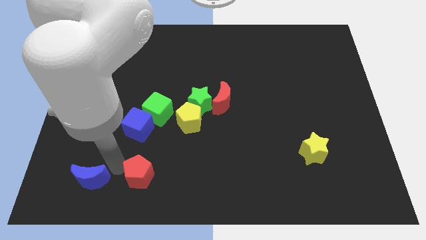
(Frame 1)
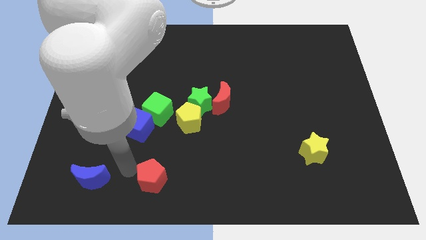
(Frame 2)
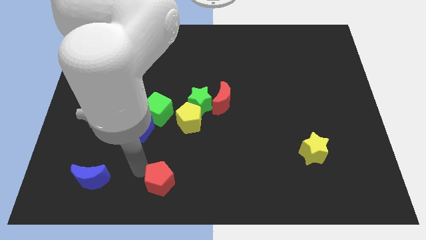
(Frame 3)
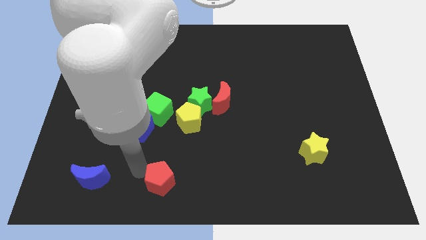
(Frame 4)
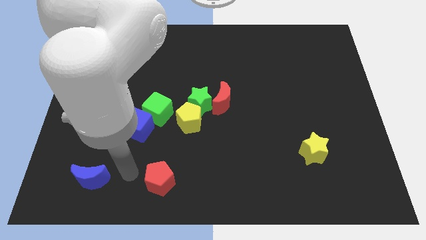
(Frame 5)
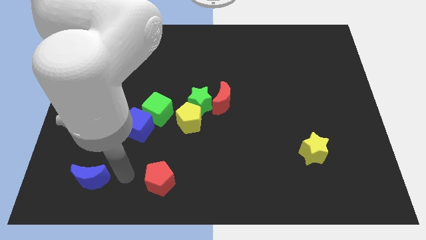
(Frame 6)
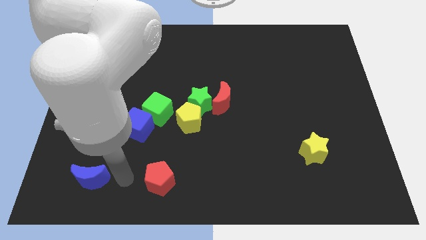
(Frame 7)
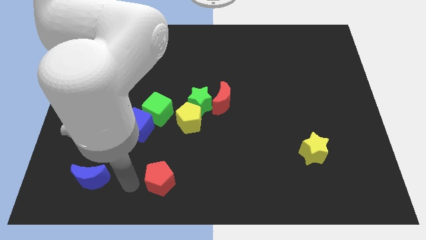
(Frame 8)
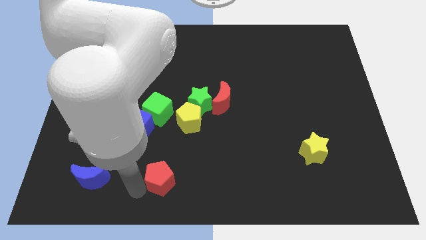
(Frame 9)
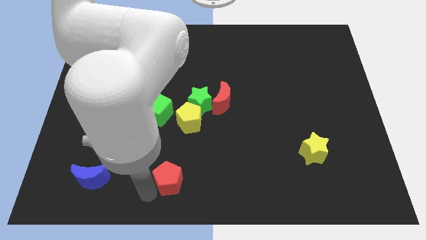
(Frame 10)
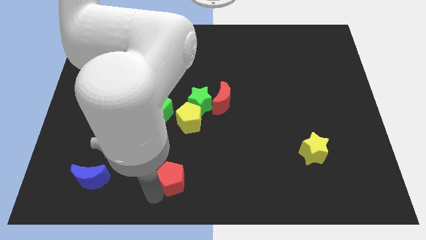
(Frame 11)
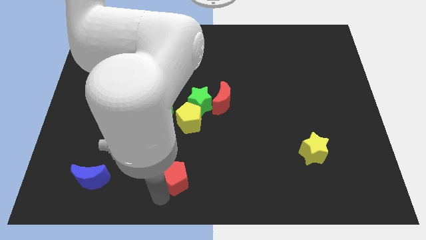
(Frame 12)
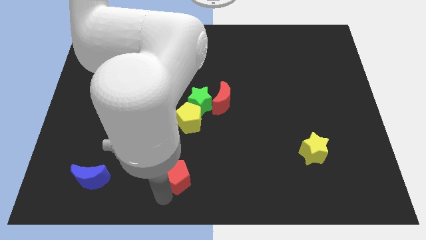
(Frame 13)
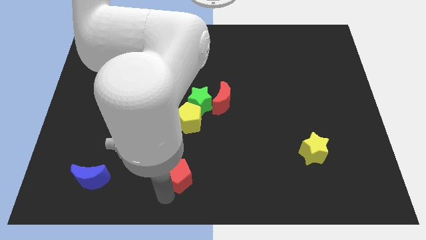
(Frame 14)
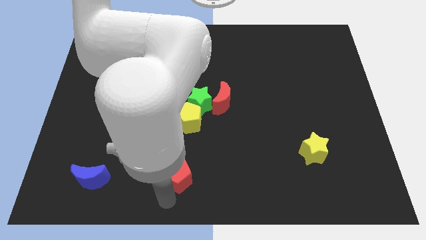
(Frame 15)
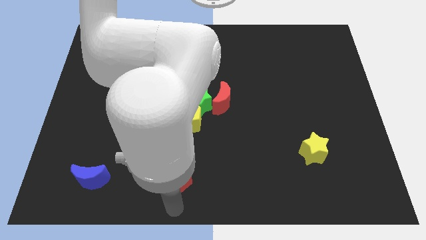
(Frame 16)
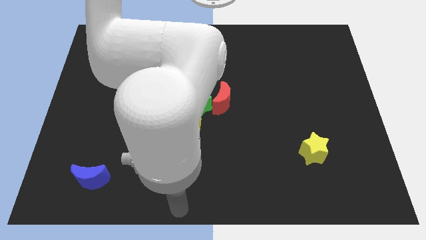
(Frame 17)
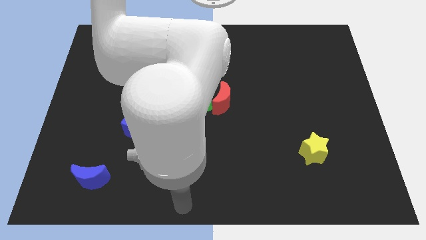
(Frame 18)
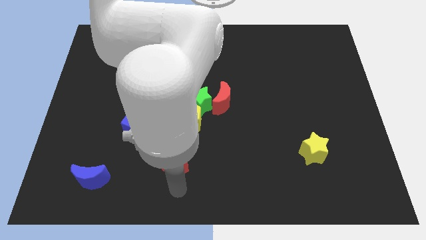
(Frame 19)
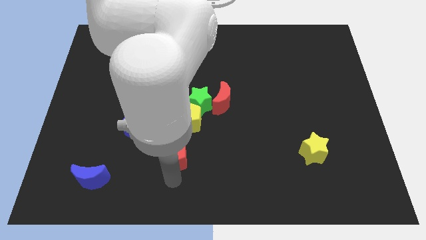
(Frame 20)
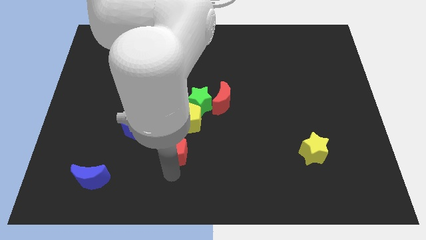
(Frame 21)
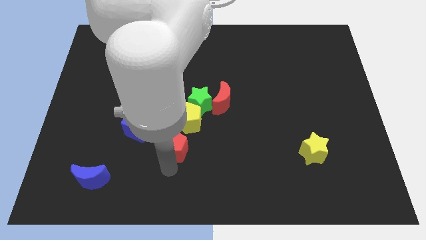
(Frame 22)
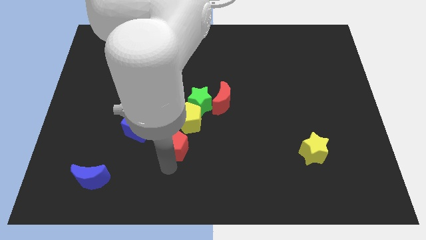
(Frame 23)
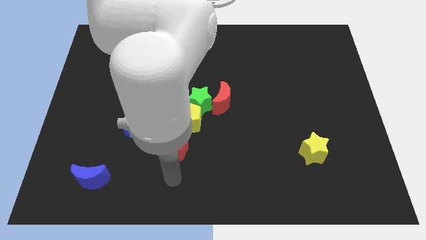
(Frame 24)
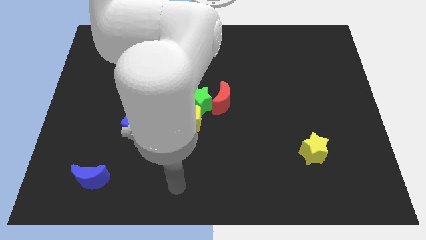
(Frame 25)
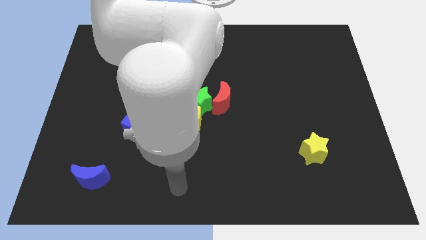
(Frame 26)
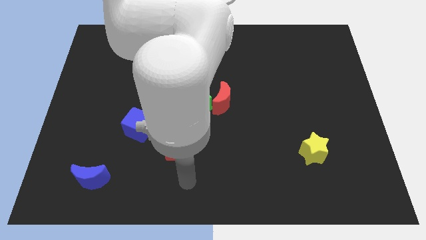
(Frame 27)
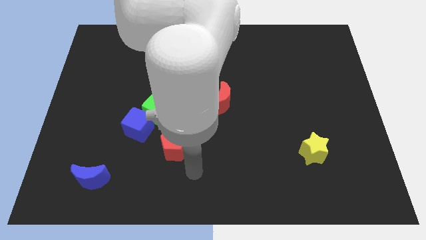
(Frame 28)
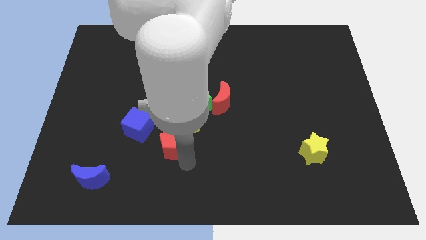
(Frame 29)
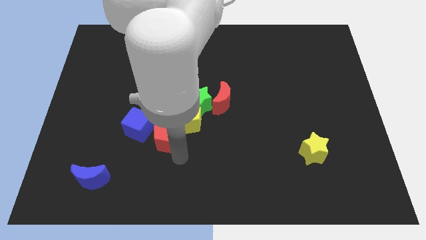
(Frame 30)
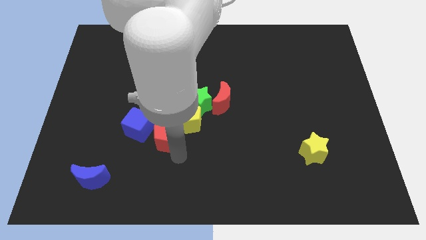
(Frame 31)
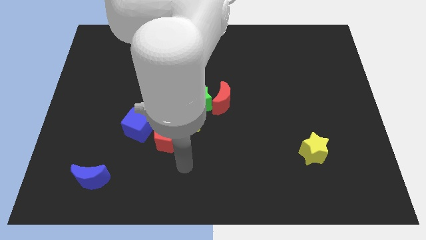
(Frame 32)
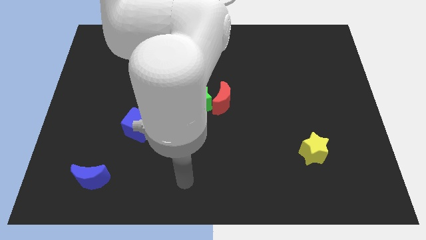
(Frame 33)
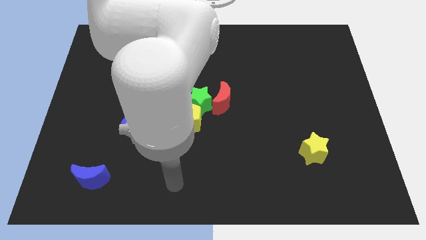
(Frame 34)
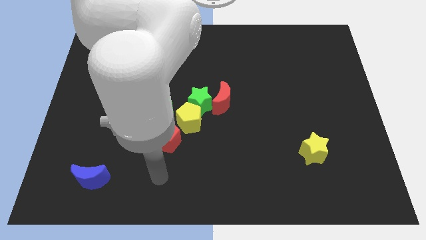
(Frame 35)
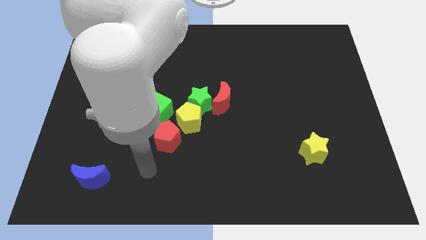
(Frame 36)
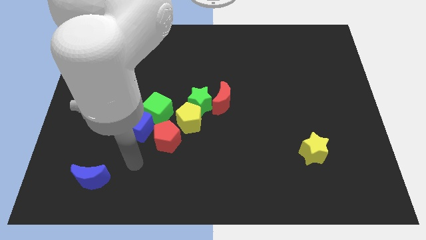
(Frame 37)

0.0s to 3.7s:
push the red pentagon into the group of blocks

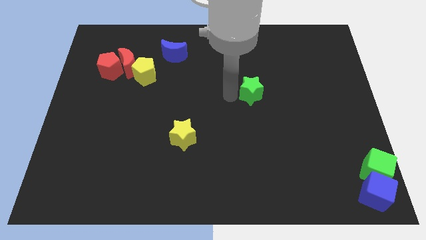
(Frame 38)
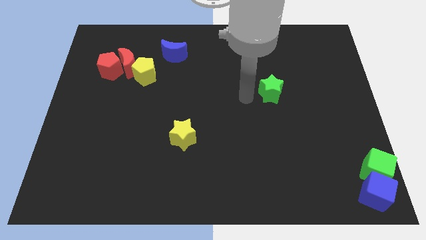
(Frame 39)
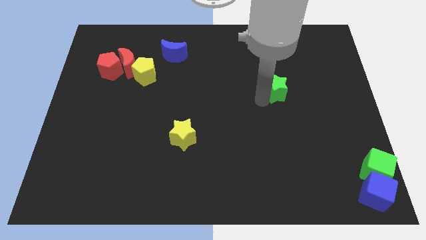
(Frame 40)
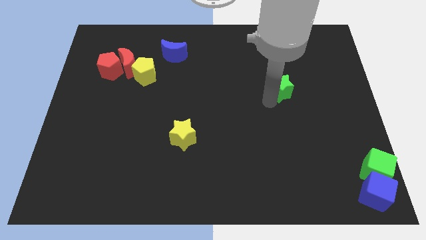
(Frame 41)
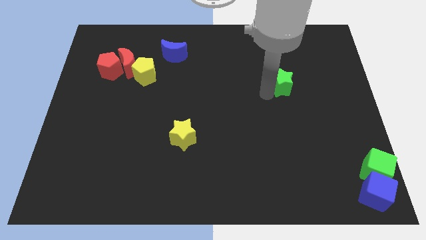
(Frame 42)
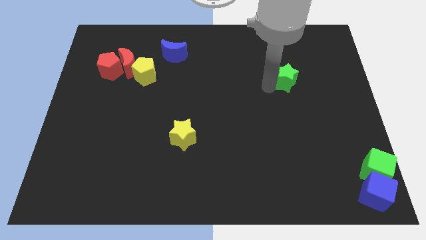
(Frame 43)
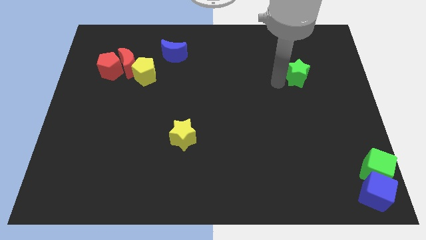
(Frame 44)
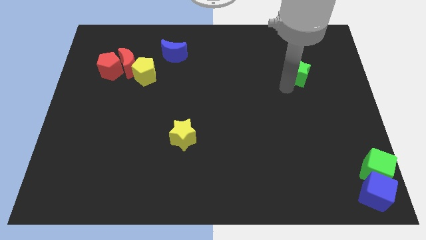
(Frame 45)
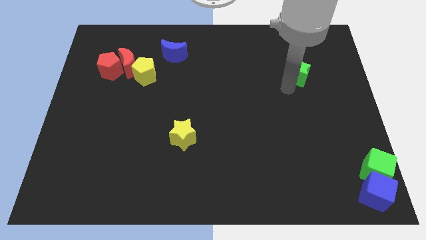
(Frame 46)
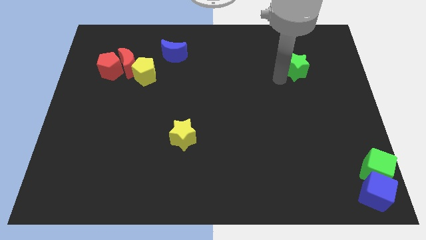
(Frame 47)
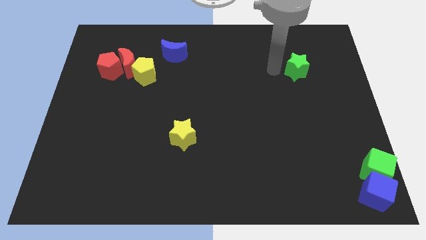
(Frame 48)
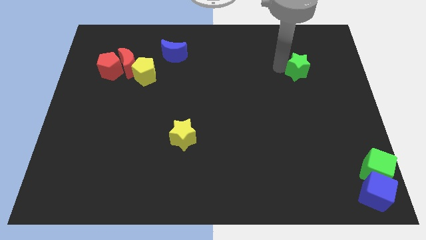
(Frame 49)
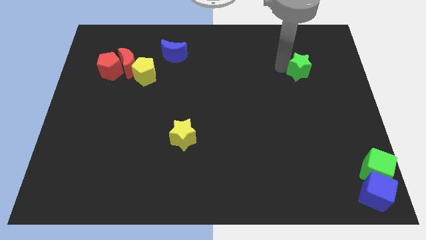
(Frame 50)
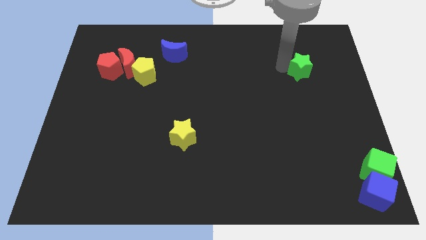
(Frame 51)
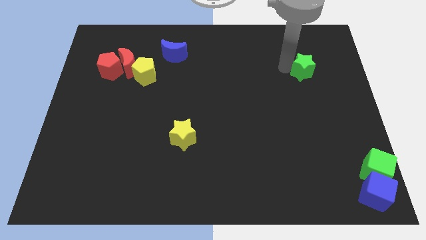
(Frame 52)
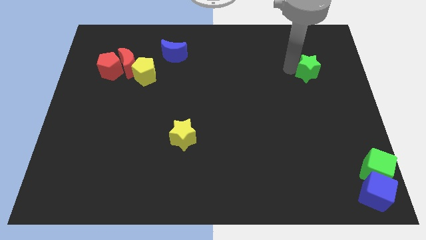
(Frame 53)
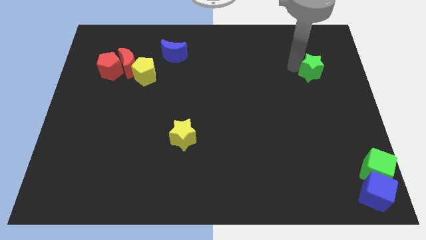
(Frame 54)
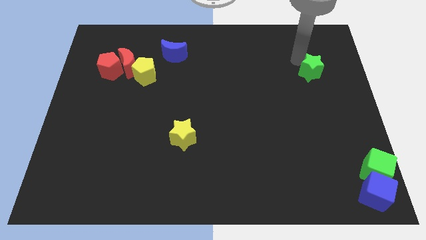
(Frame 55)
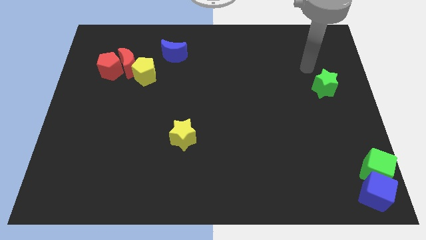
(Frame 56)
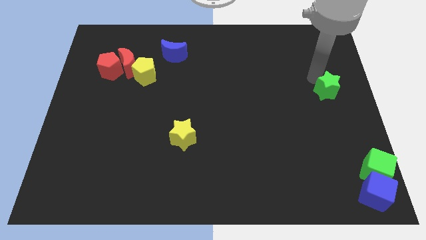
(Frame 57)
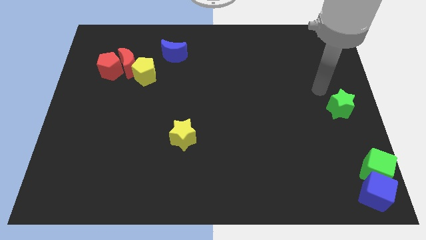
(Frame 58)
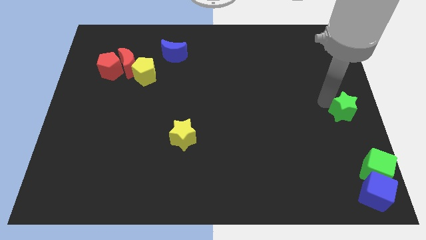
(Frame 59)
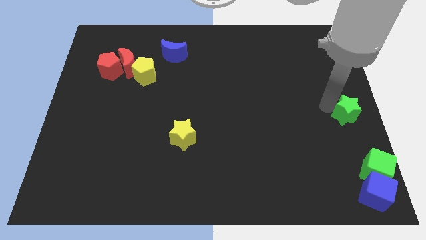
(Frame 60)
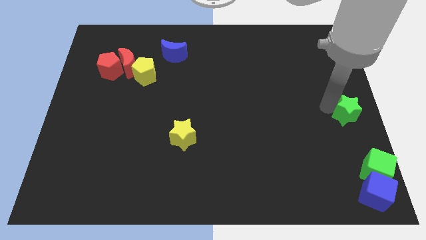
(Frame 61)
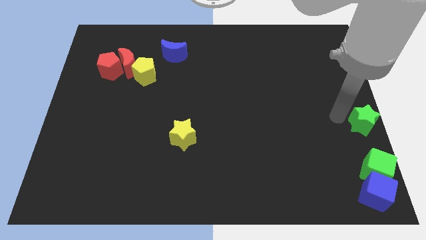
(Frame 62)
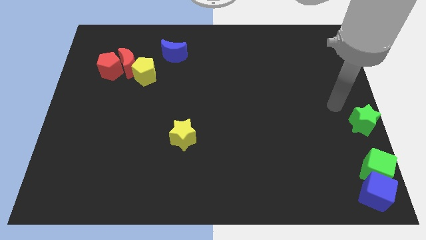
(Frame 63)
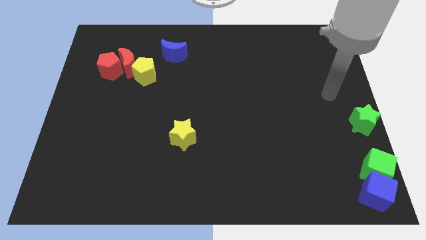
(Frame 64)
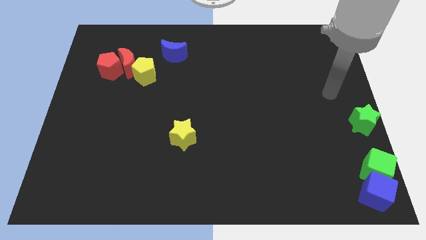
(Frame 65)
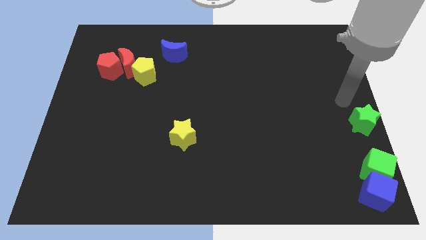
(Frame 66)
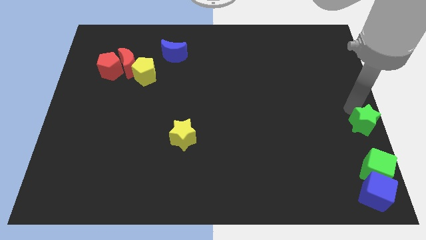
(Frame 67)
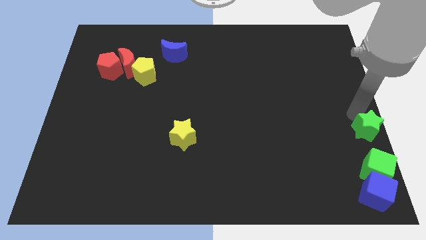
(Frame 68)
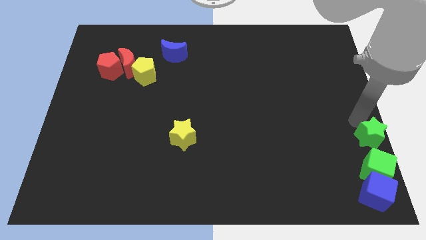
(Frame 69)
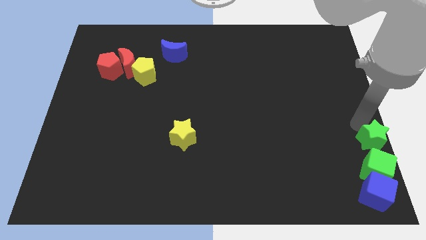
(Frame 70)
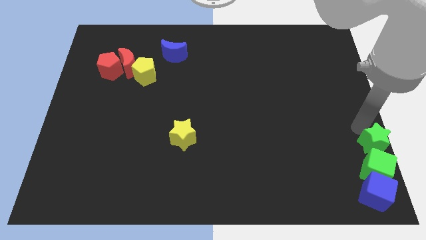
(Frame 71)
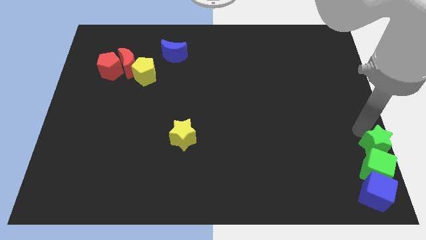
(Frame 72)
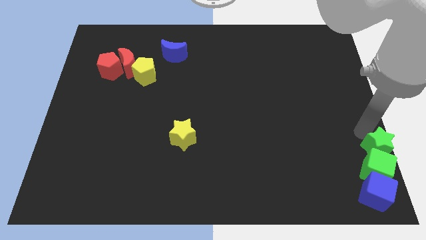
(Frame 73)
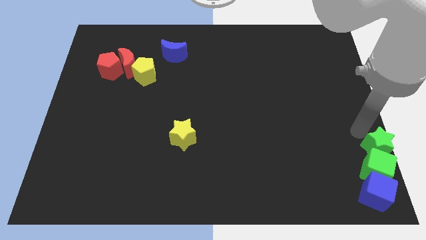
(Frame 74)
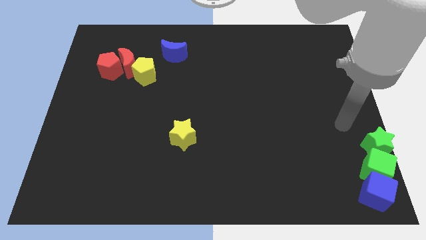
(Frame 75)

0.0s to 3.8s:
push the green star to the top of the green cube

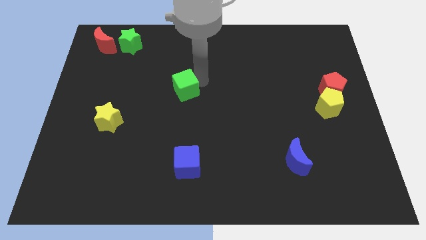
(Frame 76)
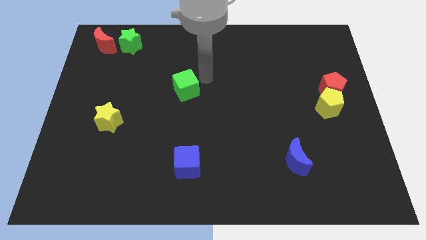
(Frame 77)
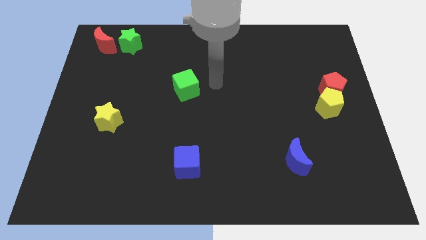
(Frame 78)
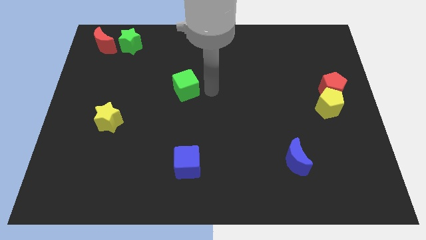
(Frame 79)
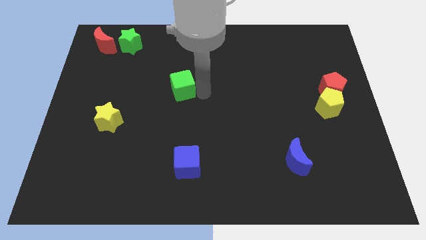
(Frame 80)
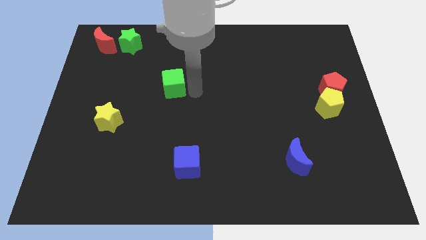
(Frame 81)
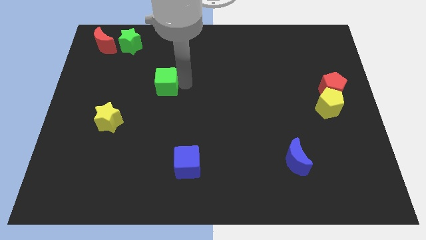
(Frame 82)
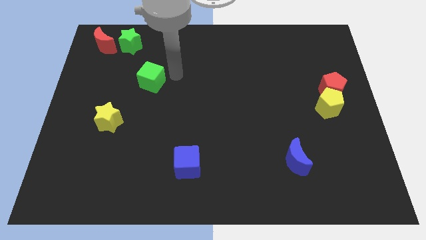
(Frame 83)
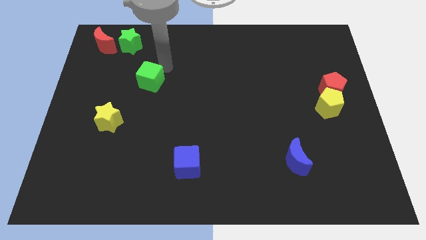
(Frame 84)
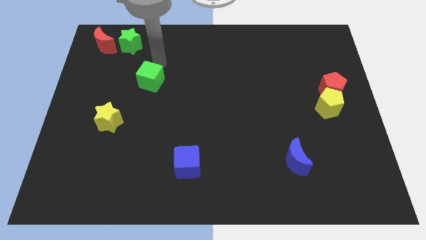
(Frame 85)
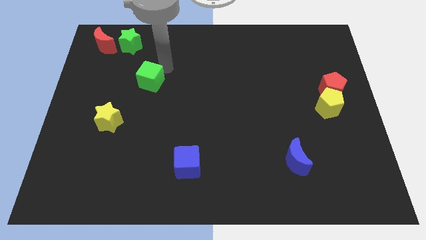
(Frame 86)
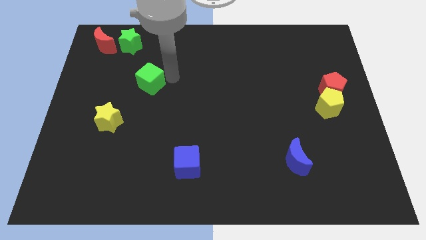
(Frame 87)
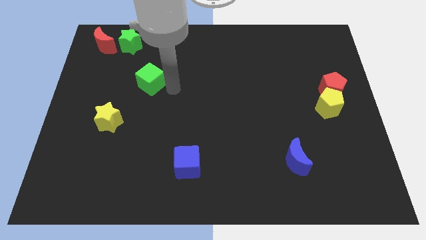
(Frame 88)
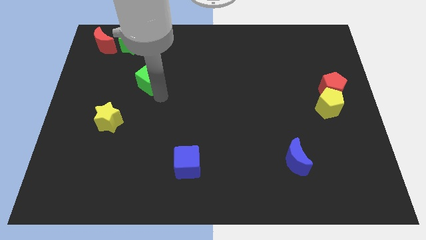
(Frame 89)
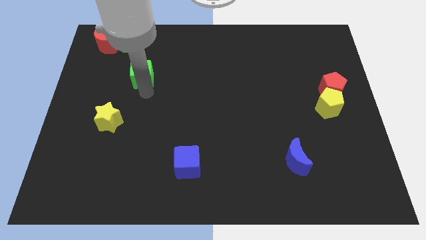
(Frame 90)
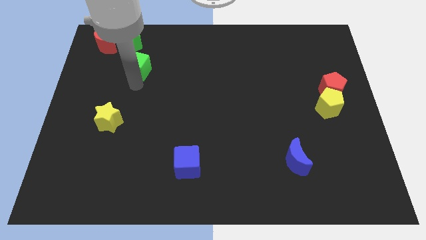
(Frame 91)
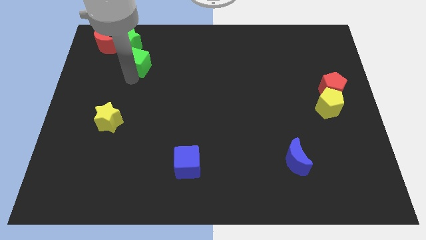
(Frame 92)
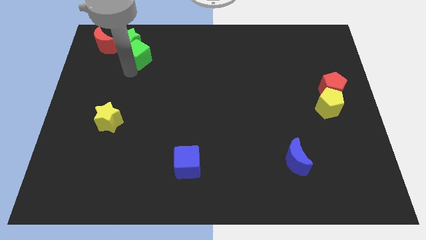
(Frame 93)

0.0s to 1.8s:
place the green cube into the green star
